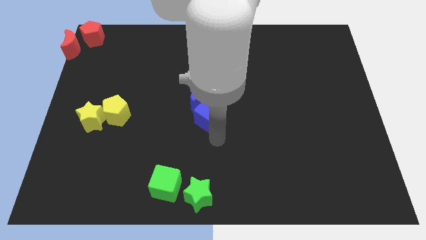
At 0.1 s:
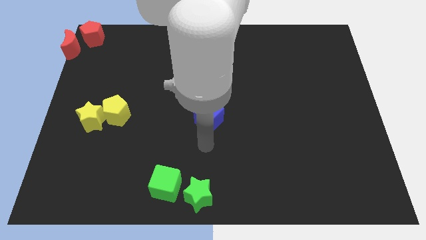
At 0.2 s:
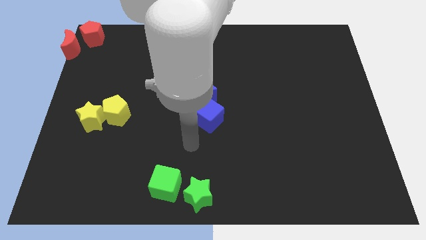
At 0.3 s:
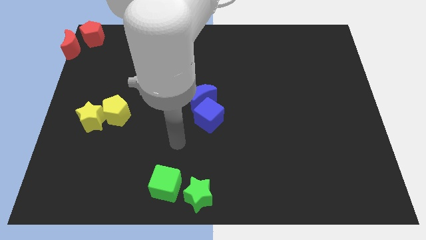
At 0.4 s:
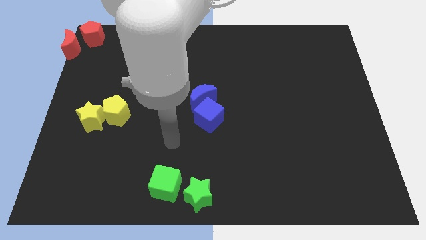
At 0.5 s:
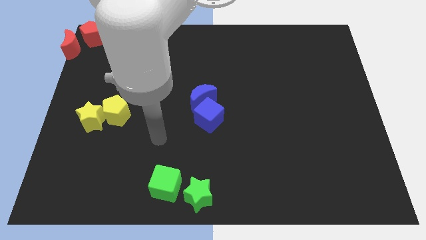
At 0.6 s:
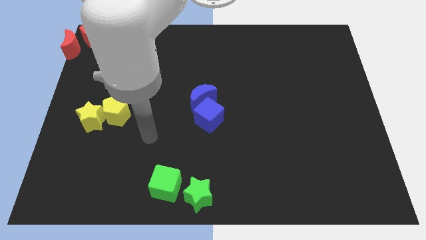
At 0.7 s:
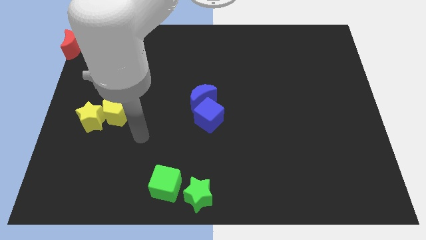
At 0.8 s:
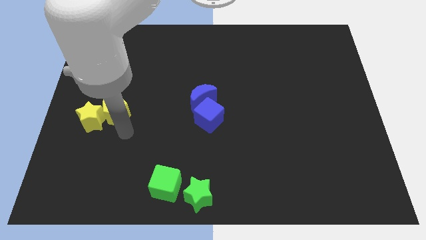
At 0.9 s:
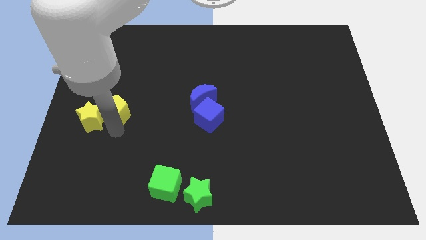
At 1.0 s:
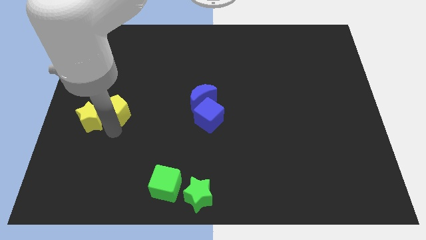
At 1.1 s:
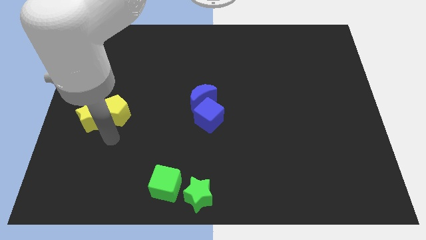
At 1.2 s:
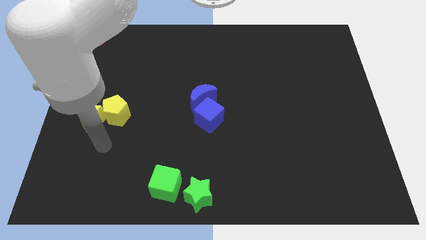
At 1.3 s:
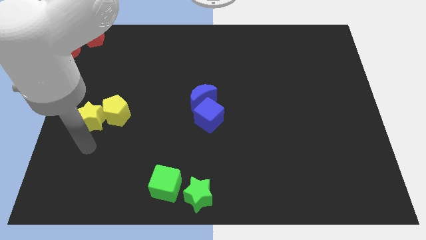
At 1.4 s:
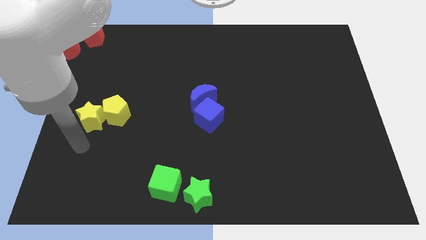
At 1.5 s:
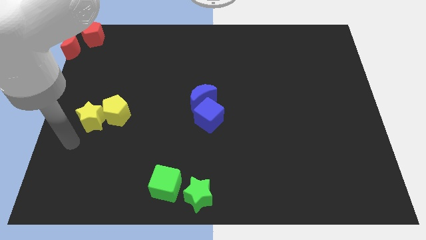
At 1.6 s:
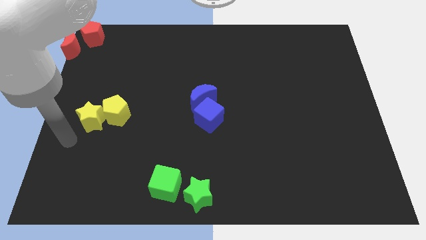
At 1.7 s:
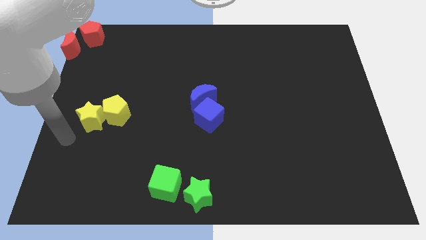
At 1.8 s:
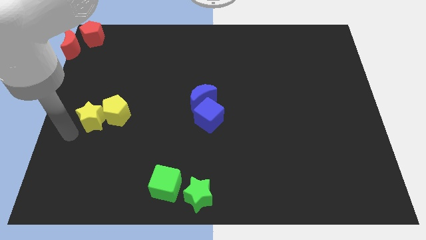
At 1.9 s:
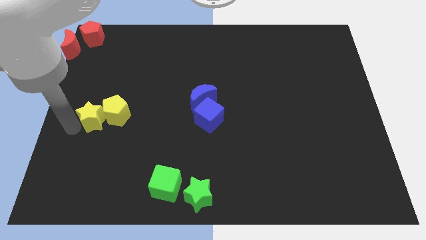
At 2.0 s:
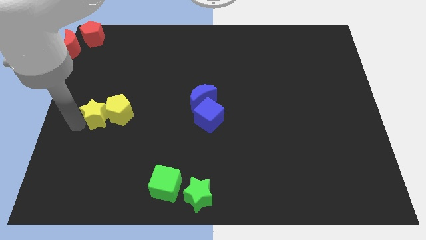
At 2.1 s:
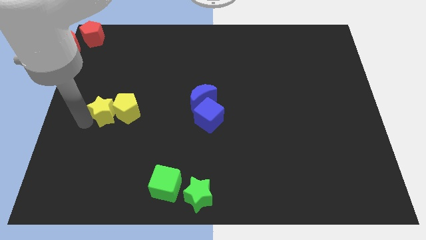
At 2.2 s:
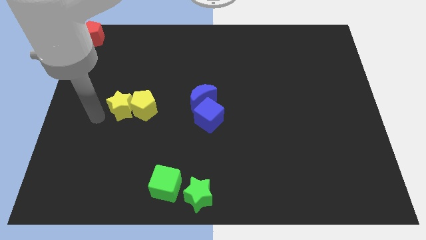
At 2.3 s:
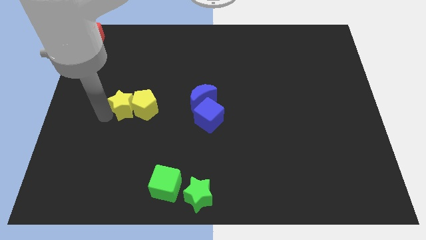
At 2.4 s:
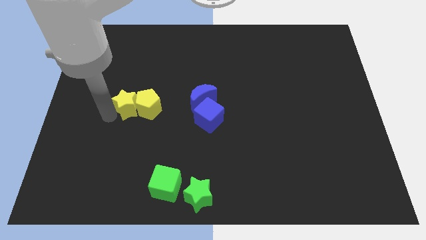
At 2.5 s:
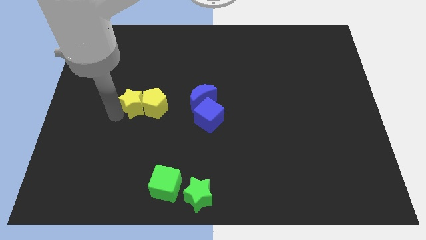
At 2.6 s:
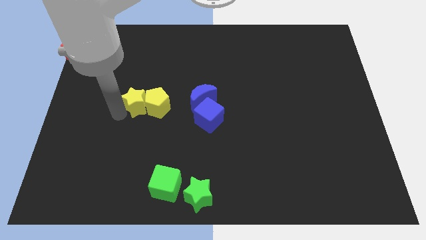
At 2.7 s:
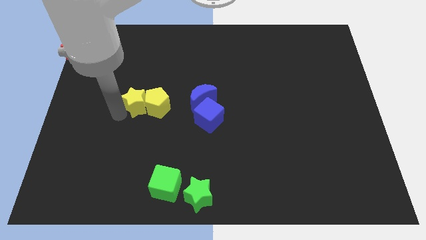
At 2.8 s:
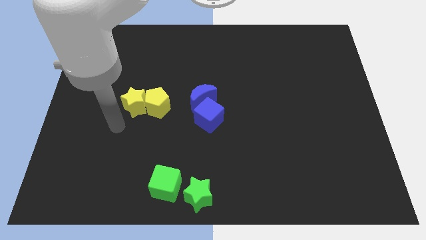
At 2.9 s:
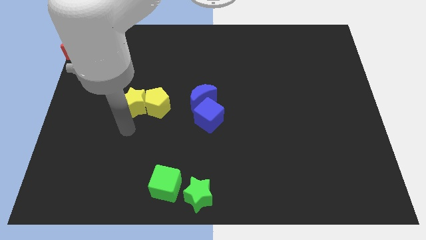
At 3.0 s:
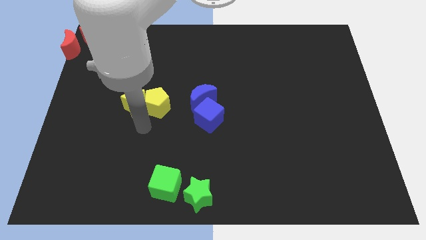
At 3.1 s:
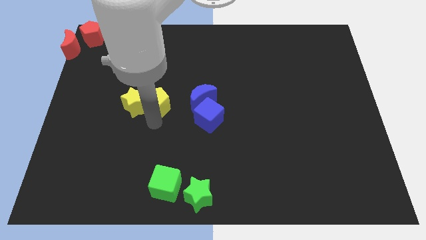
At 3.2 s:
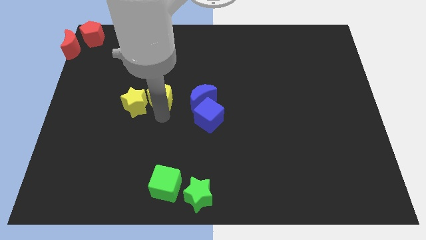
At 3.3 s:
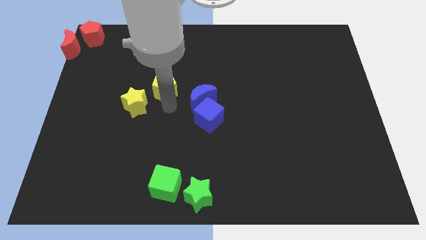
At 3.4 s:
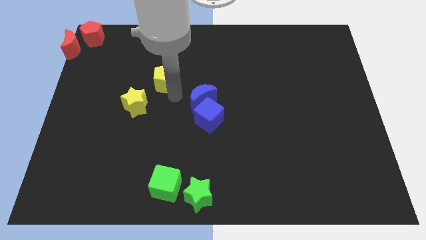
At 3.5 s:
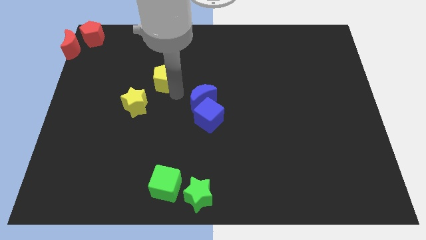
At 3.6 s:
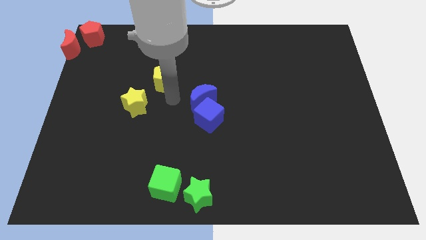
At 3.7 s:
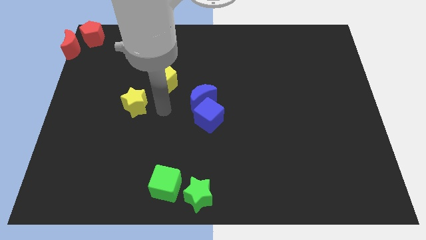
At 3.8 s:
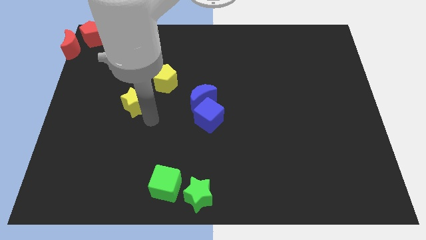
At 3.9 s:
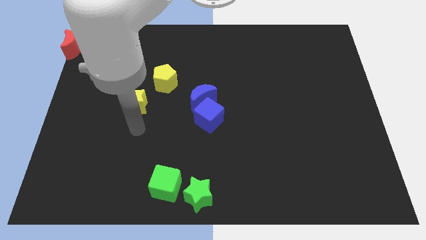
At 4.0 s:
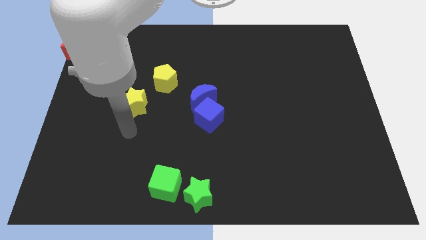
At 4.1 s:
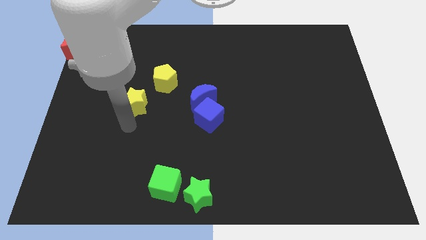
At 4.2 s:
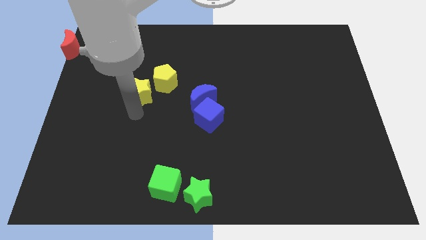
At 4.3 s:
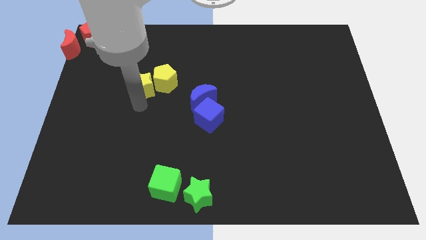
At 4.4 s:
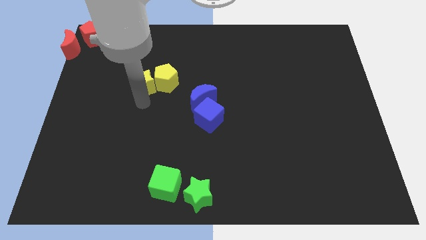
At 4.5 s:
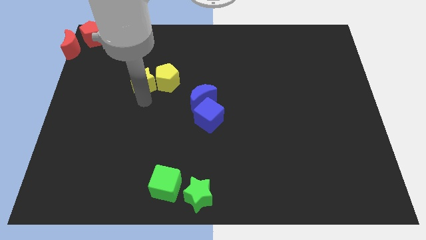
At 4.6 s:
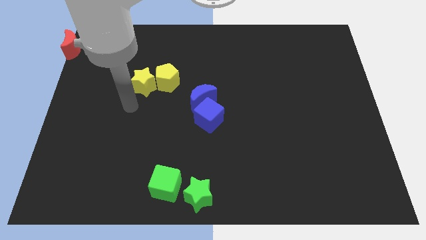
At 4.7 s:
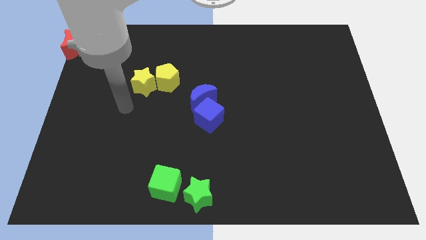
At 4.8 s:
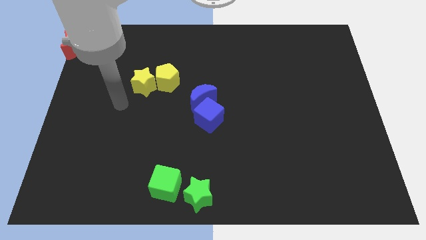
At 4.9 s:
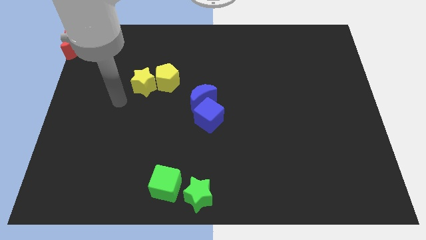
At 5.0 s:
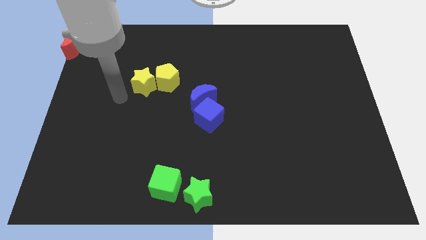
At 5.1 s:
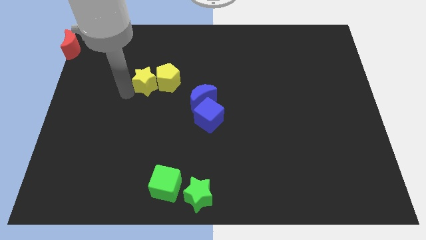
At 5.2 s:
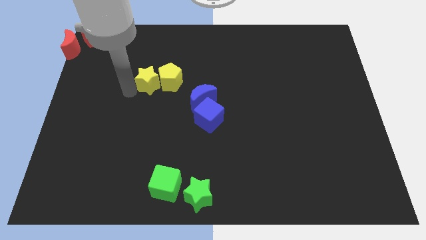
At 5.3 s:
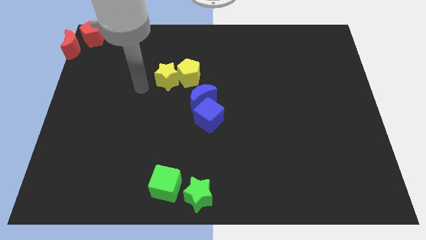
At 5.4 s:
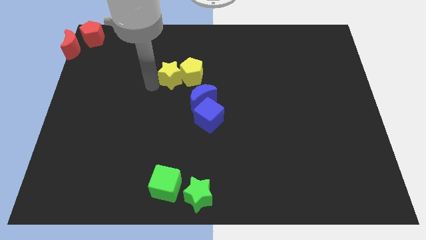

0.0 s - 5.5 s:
push yellow star along with yellow pentagon towards the blue crescent

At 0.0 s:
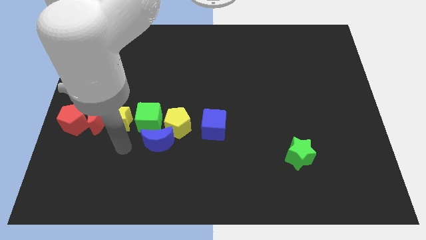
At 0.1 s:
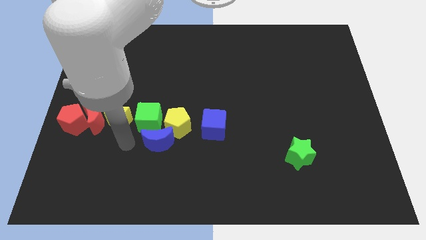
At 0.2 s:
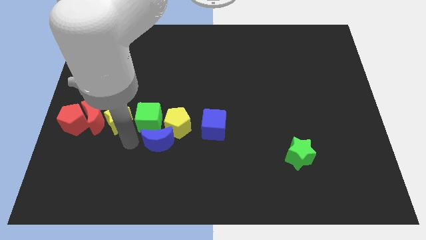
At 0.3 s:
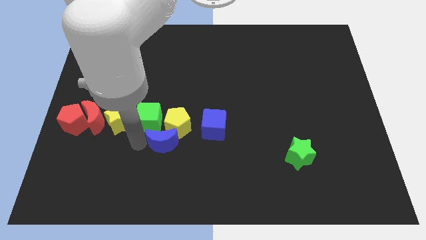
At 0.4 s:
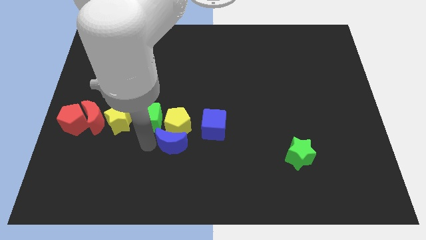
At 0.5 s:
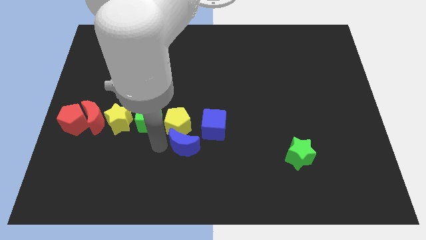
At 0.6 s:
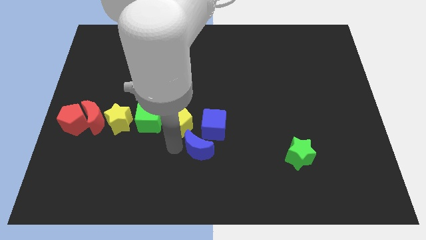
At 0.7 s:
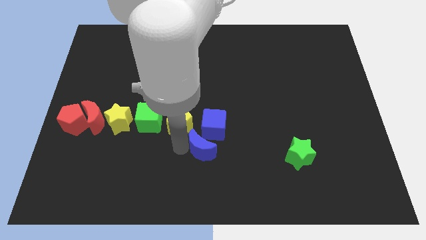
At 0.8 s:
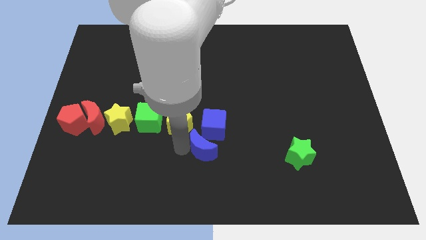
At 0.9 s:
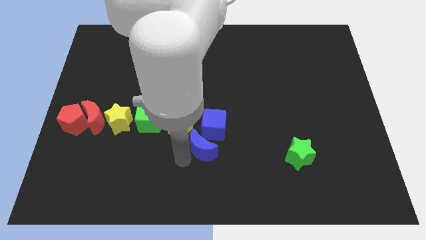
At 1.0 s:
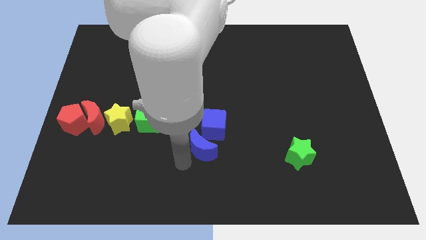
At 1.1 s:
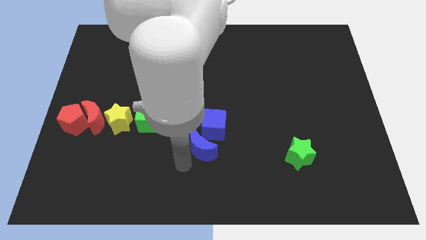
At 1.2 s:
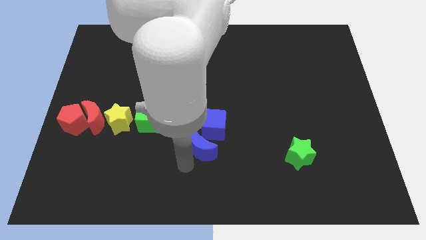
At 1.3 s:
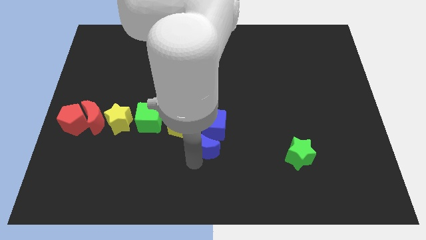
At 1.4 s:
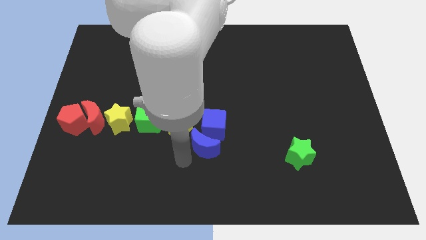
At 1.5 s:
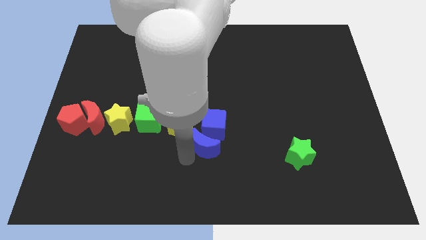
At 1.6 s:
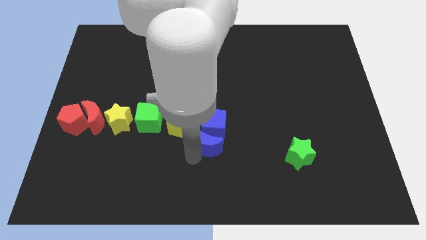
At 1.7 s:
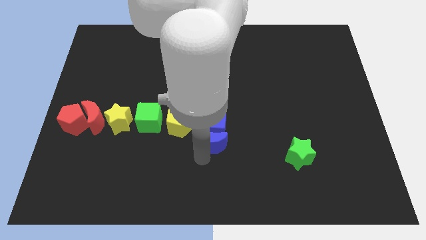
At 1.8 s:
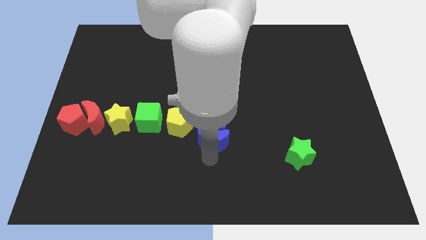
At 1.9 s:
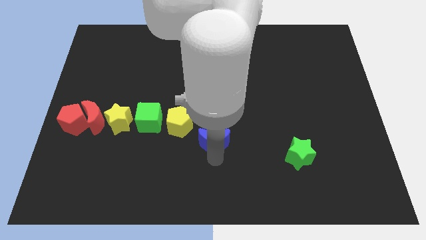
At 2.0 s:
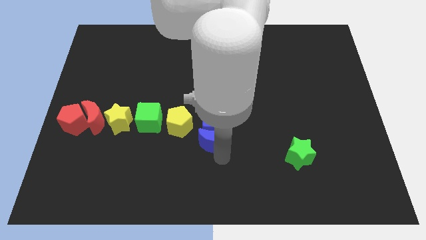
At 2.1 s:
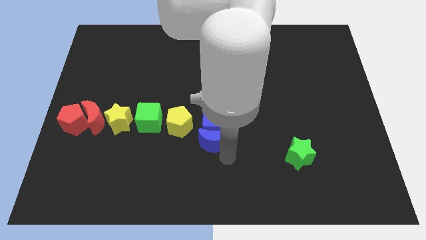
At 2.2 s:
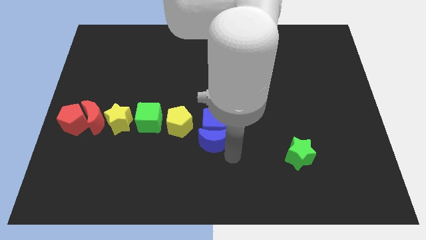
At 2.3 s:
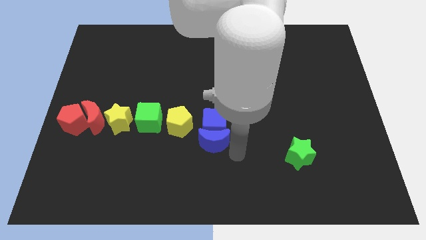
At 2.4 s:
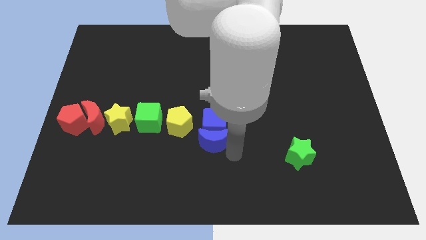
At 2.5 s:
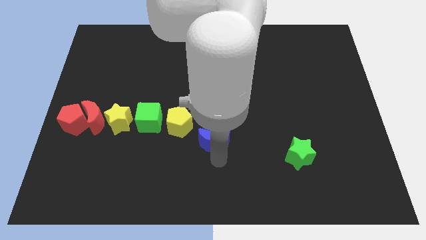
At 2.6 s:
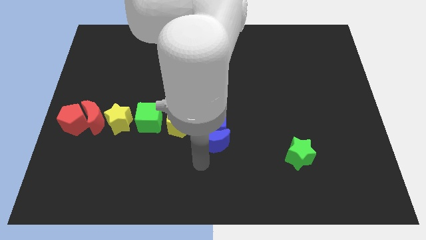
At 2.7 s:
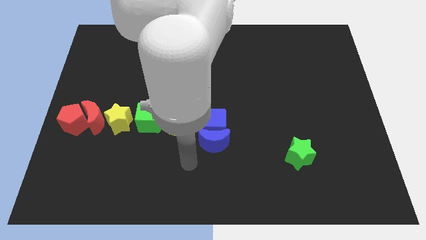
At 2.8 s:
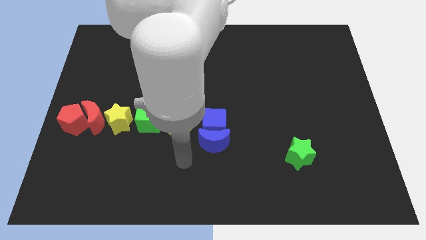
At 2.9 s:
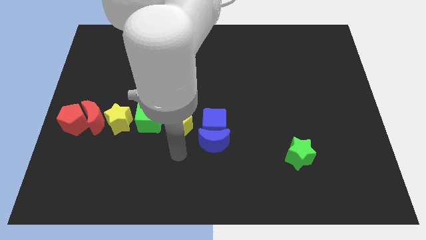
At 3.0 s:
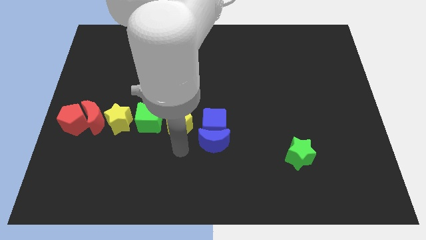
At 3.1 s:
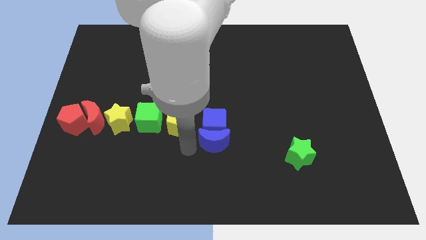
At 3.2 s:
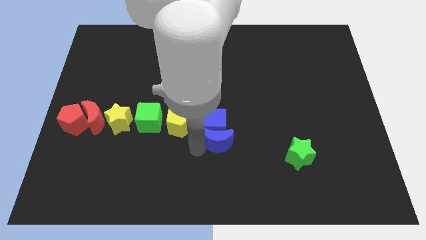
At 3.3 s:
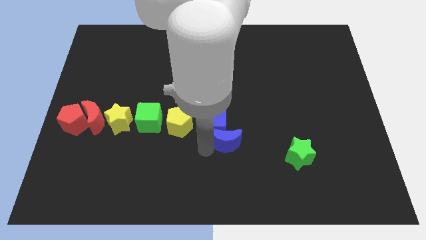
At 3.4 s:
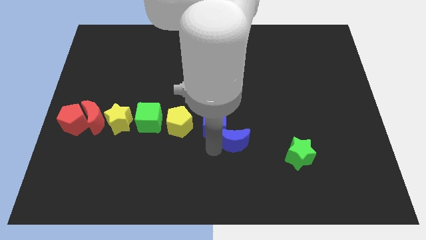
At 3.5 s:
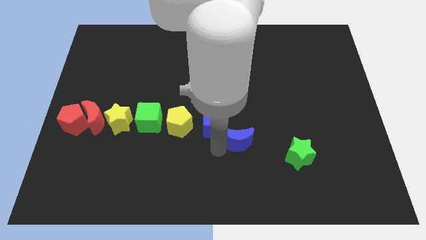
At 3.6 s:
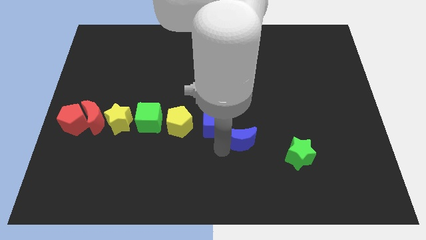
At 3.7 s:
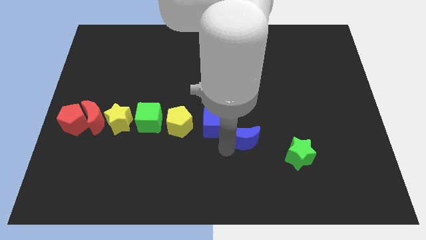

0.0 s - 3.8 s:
slide the blue moon to the bottom right side of the blue cube
